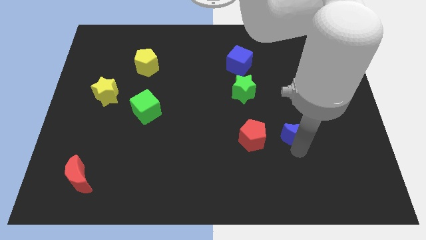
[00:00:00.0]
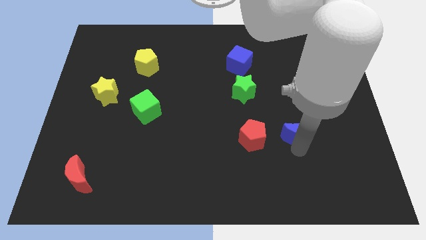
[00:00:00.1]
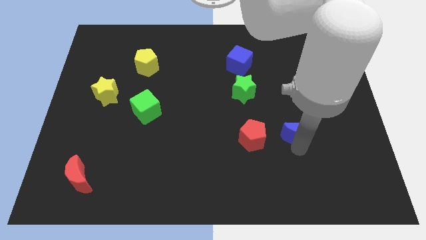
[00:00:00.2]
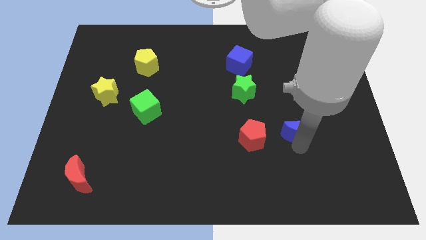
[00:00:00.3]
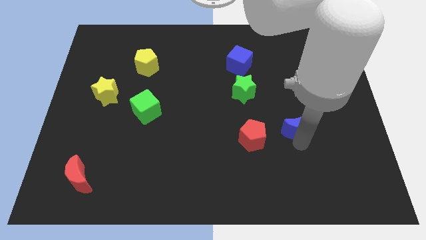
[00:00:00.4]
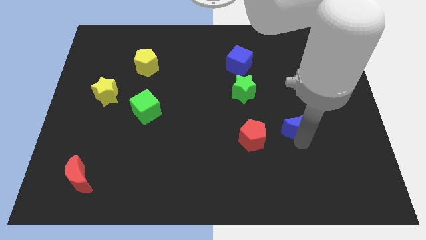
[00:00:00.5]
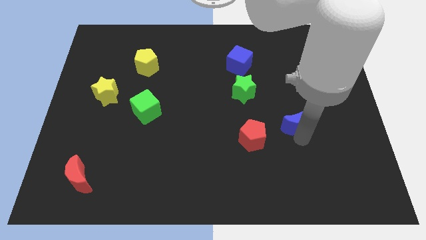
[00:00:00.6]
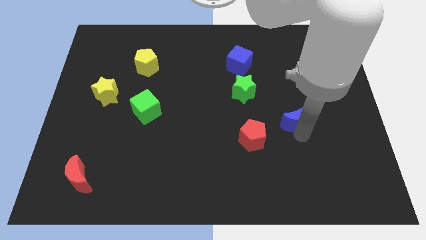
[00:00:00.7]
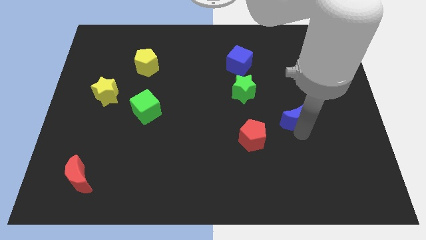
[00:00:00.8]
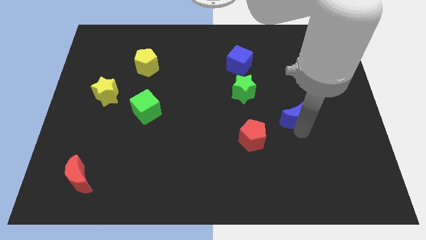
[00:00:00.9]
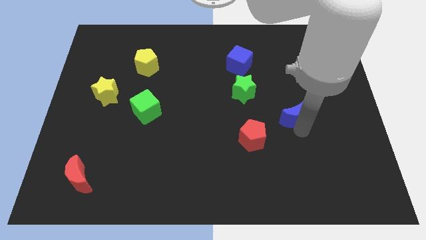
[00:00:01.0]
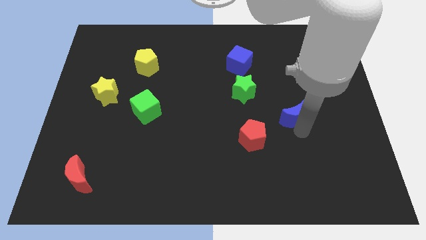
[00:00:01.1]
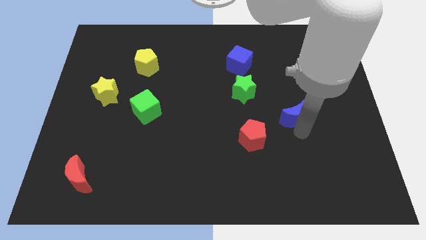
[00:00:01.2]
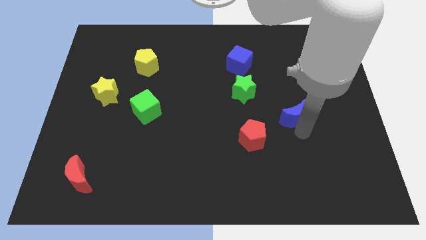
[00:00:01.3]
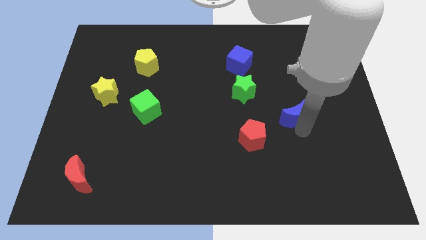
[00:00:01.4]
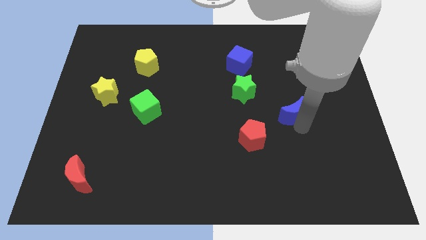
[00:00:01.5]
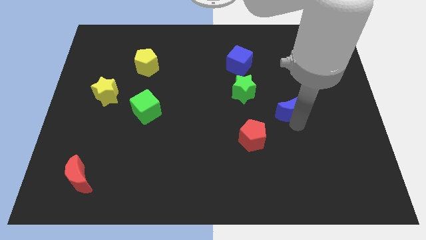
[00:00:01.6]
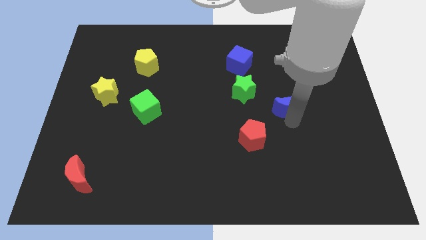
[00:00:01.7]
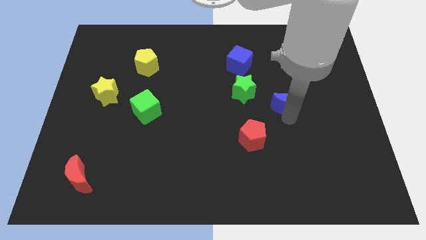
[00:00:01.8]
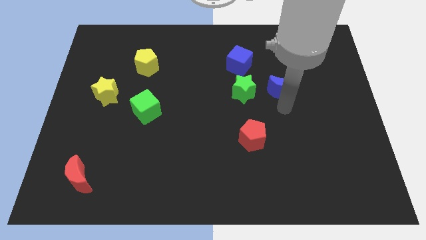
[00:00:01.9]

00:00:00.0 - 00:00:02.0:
place the blue moon to the right side of green star

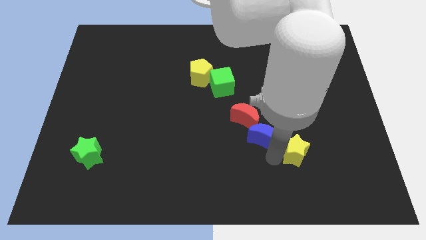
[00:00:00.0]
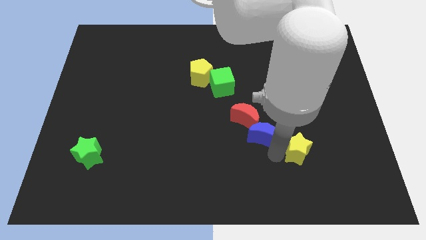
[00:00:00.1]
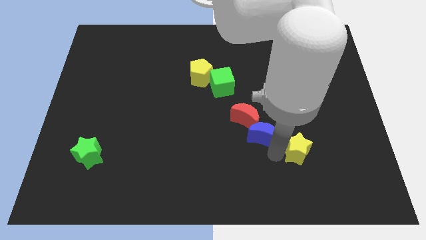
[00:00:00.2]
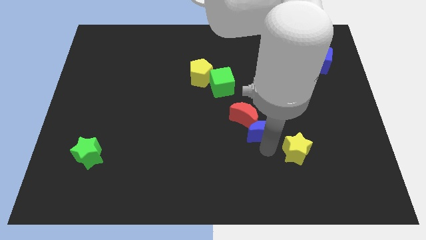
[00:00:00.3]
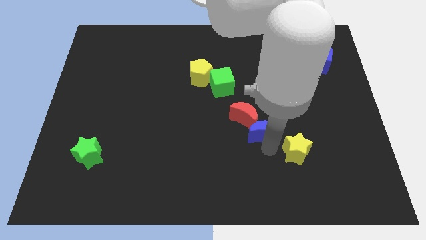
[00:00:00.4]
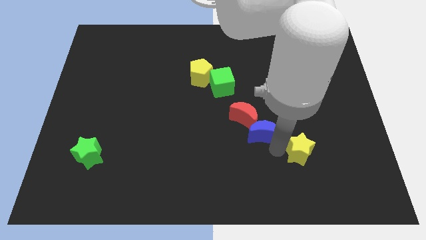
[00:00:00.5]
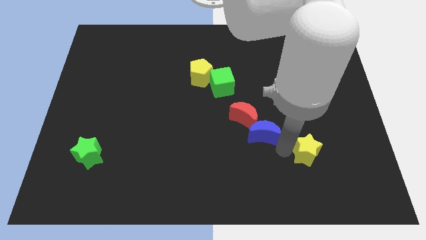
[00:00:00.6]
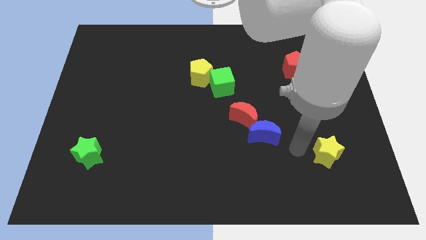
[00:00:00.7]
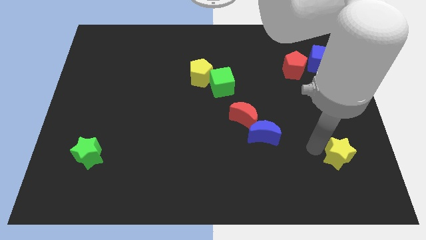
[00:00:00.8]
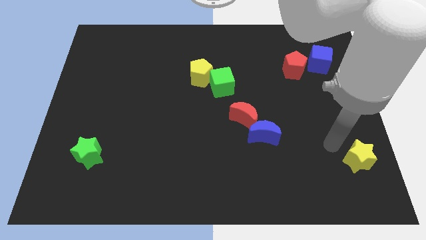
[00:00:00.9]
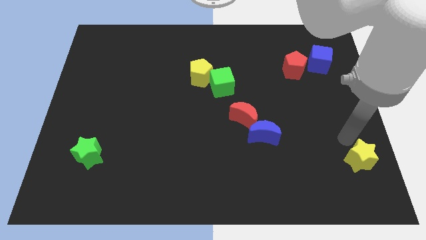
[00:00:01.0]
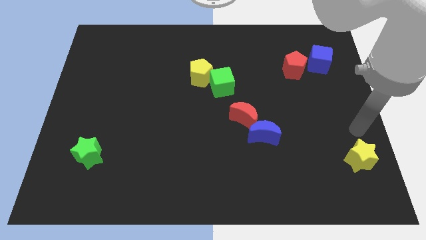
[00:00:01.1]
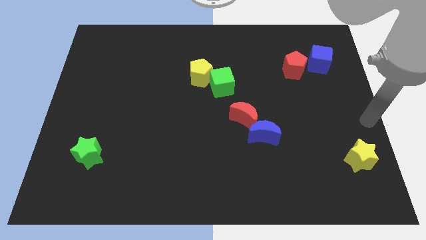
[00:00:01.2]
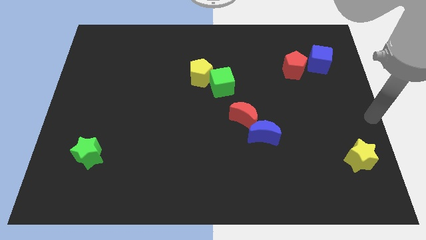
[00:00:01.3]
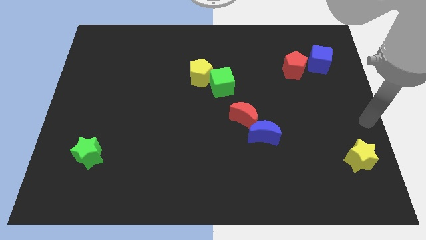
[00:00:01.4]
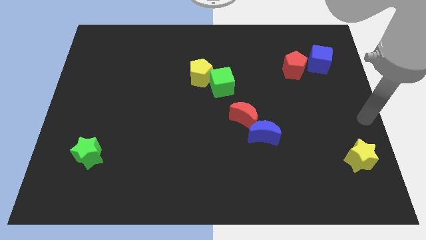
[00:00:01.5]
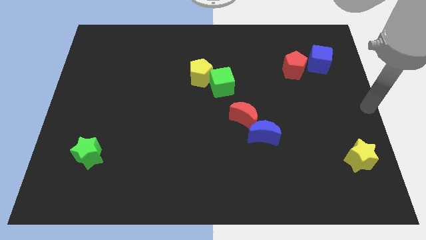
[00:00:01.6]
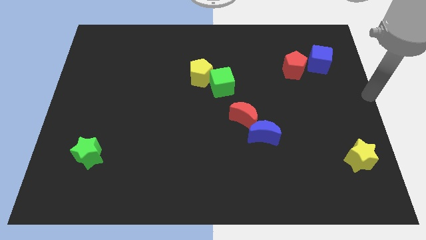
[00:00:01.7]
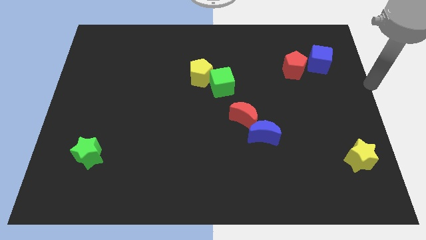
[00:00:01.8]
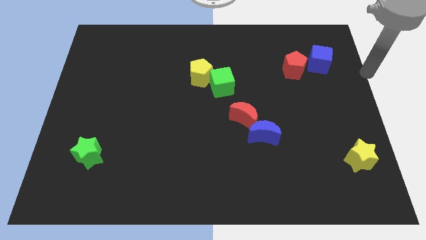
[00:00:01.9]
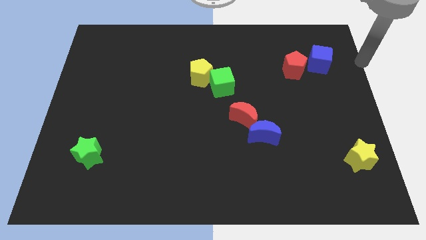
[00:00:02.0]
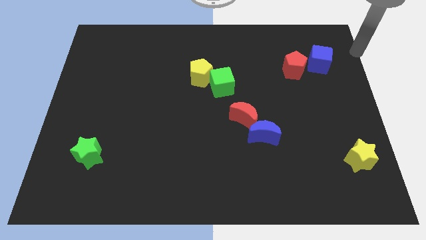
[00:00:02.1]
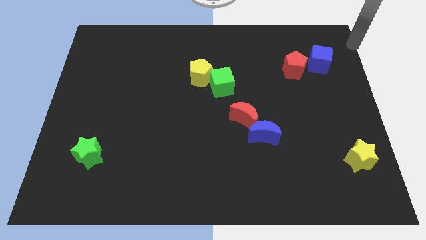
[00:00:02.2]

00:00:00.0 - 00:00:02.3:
push the yellow star towards the right of the board

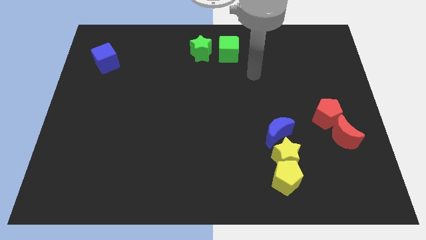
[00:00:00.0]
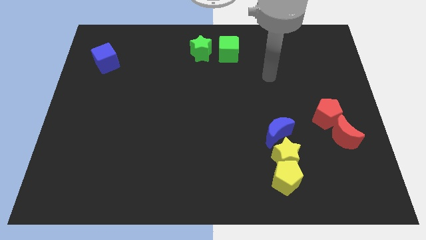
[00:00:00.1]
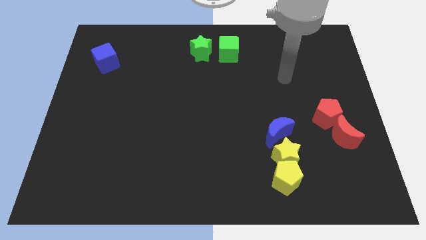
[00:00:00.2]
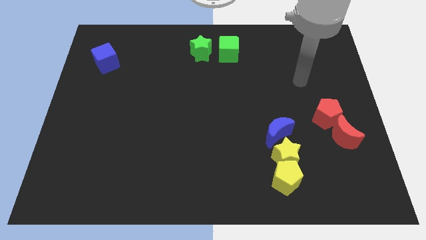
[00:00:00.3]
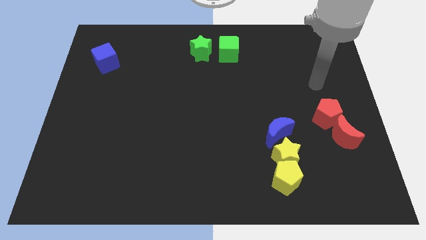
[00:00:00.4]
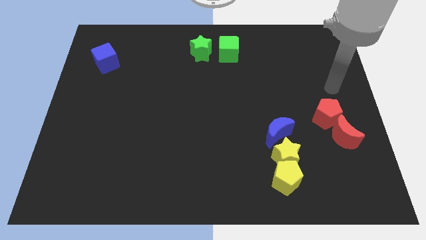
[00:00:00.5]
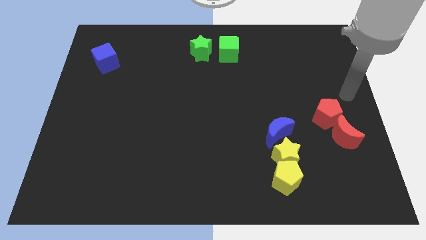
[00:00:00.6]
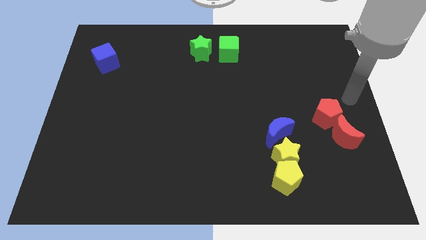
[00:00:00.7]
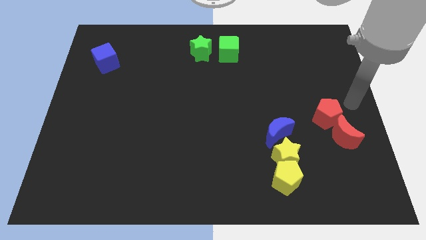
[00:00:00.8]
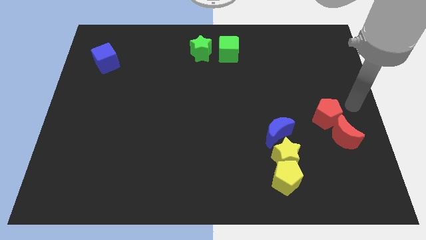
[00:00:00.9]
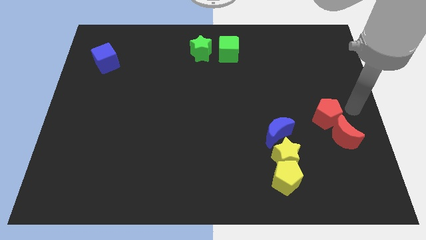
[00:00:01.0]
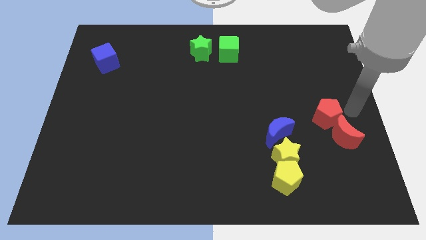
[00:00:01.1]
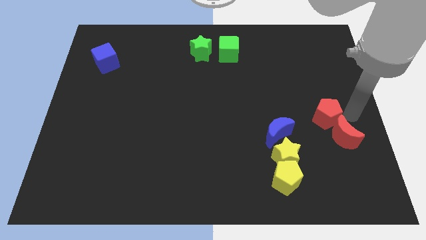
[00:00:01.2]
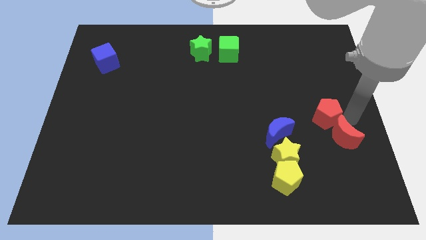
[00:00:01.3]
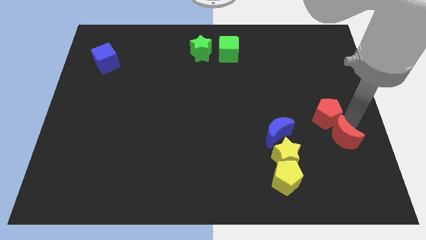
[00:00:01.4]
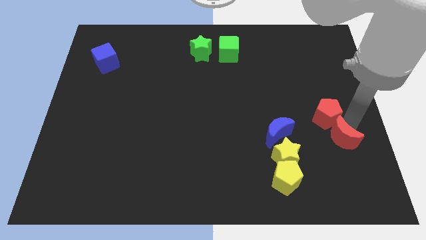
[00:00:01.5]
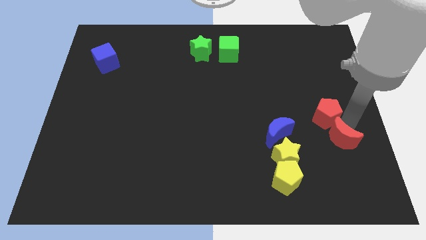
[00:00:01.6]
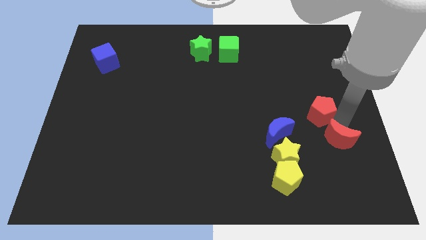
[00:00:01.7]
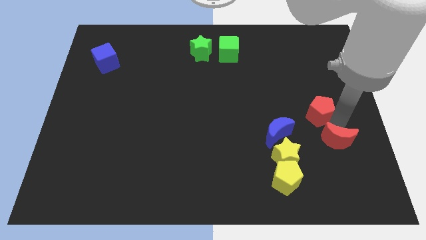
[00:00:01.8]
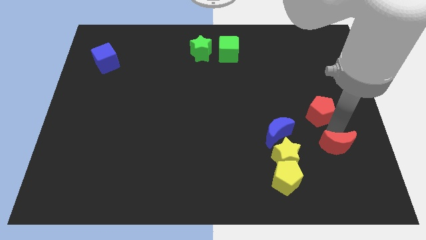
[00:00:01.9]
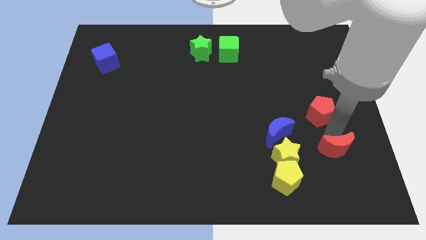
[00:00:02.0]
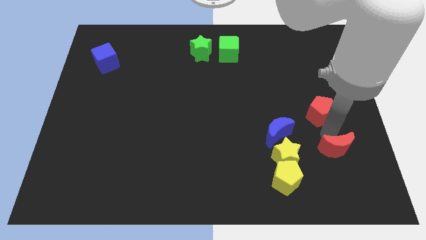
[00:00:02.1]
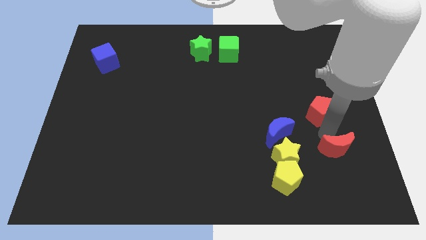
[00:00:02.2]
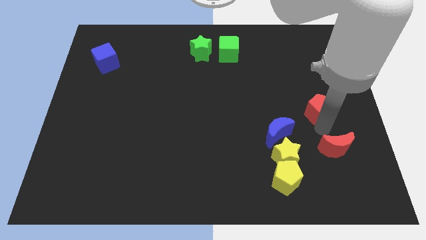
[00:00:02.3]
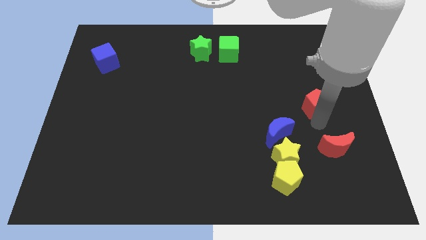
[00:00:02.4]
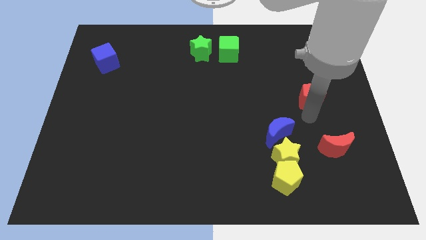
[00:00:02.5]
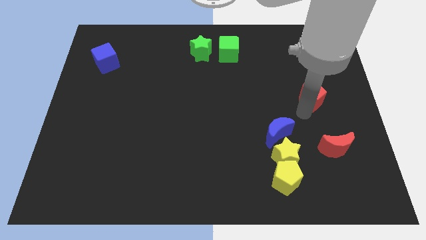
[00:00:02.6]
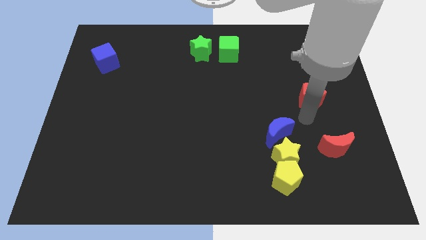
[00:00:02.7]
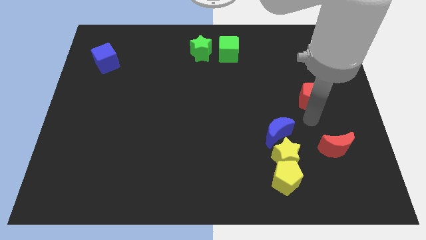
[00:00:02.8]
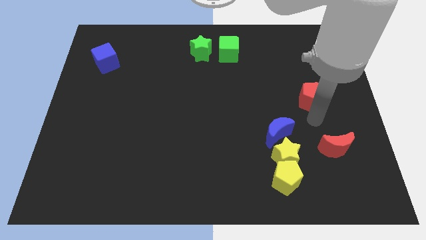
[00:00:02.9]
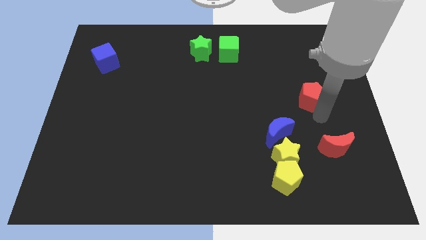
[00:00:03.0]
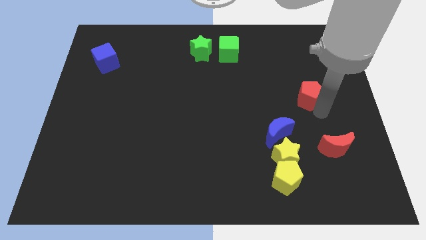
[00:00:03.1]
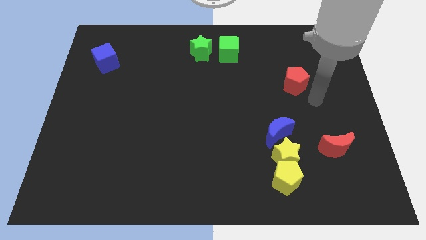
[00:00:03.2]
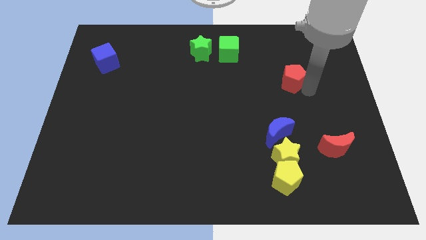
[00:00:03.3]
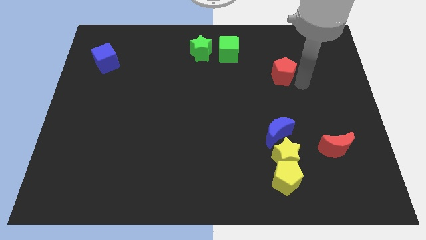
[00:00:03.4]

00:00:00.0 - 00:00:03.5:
push the red pentagon towards the top center of the board

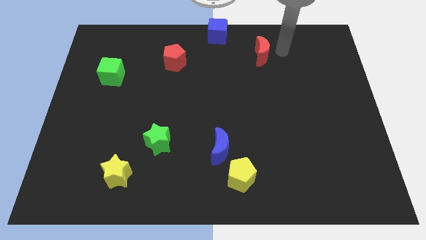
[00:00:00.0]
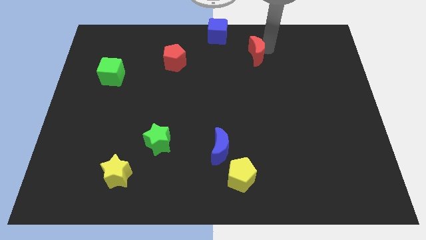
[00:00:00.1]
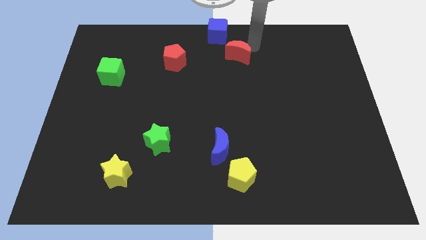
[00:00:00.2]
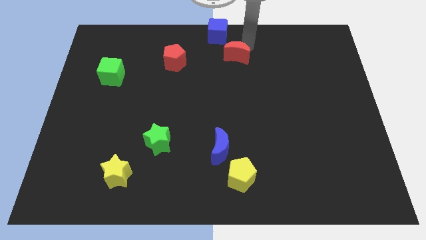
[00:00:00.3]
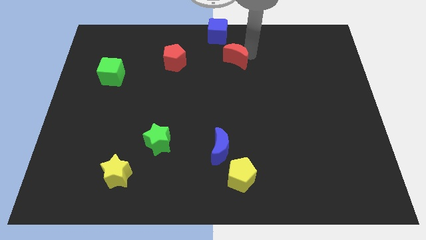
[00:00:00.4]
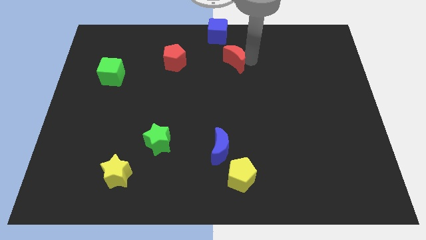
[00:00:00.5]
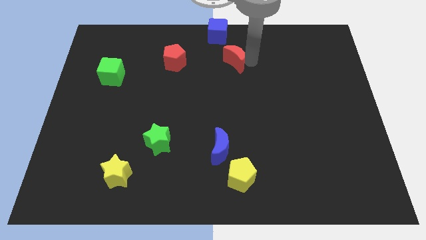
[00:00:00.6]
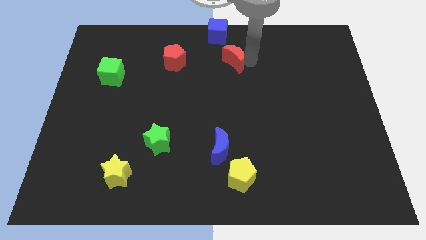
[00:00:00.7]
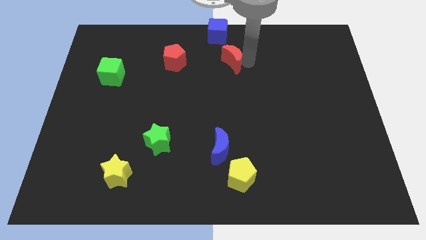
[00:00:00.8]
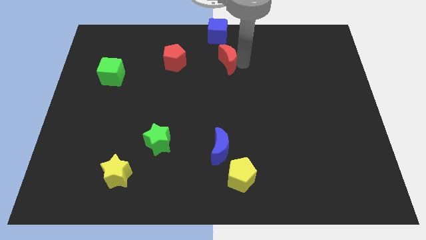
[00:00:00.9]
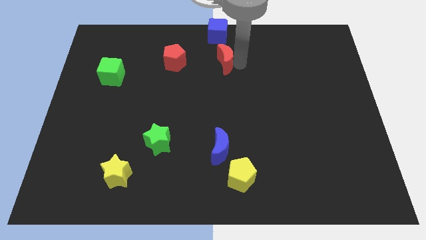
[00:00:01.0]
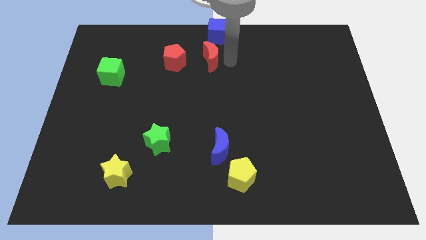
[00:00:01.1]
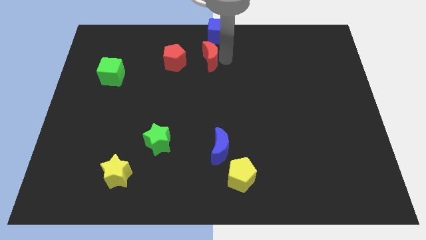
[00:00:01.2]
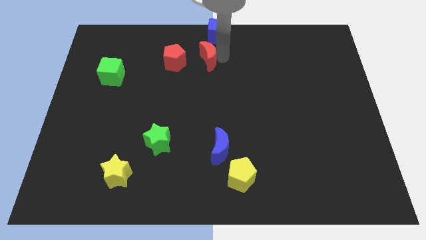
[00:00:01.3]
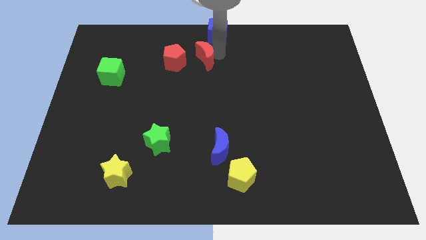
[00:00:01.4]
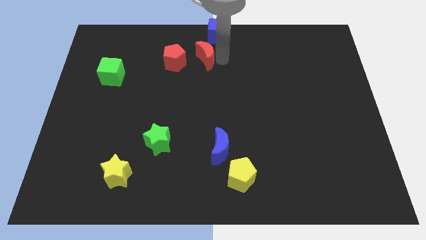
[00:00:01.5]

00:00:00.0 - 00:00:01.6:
move the red crescent right to the red pentagon
